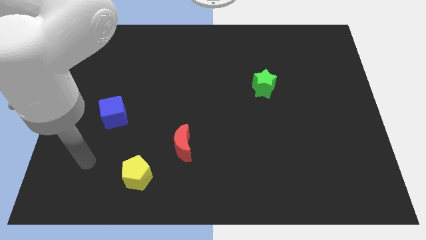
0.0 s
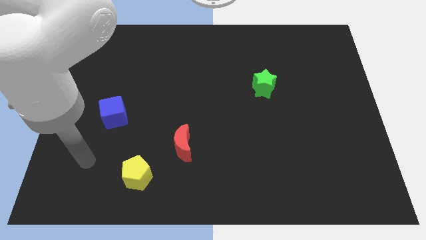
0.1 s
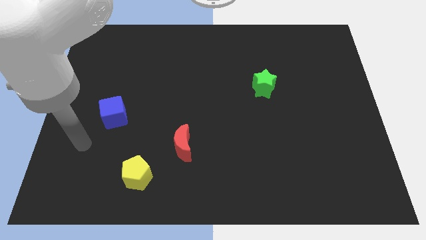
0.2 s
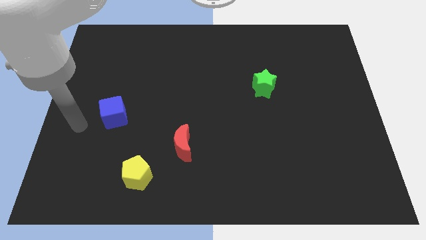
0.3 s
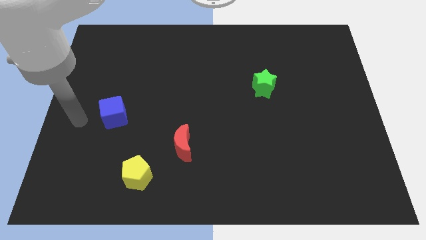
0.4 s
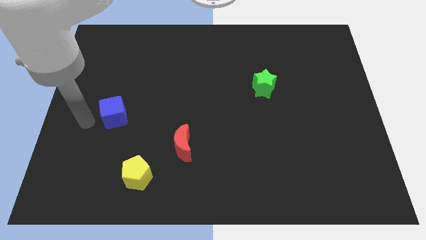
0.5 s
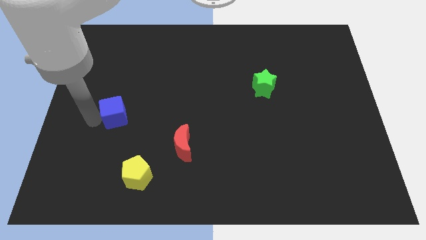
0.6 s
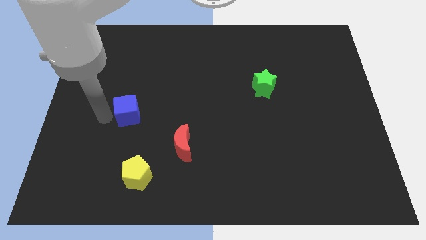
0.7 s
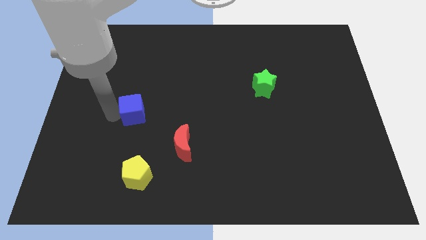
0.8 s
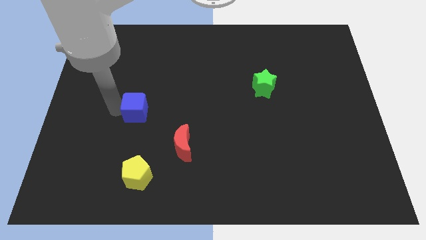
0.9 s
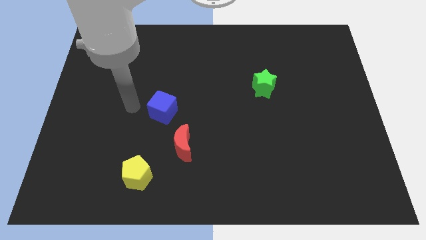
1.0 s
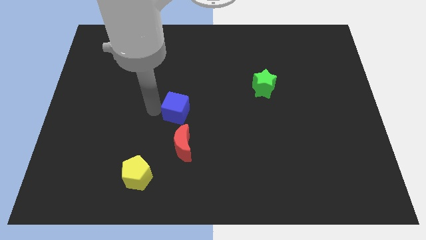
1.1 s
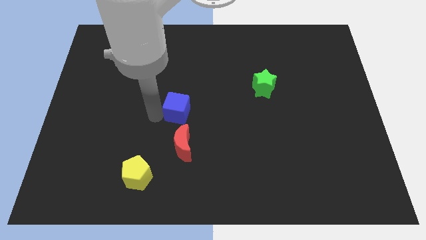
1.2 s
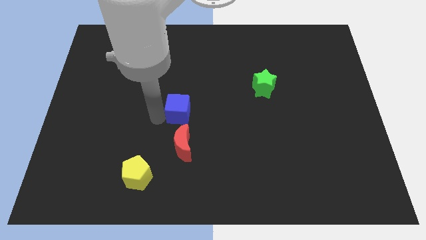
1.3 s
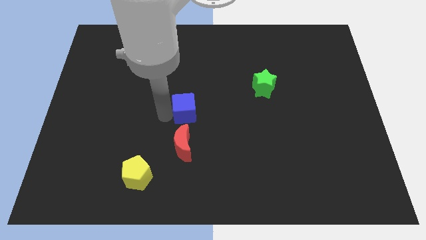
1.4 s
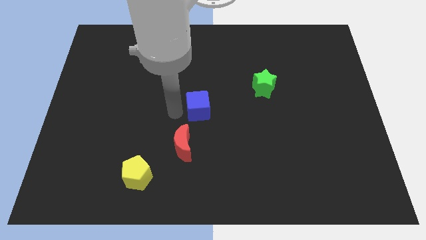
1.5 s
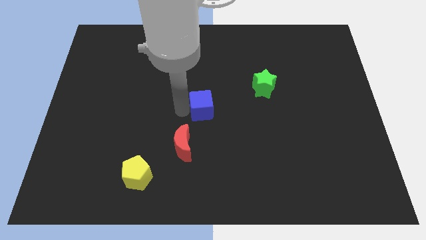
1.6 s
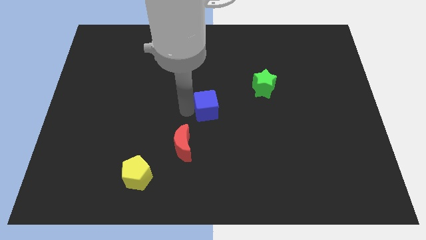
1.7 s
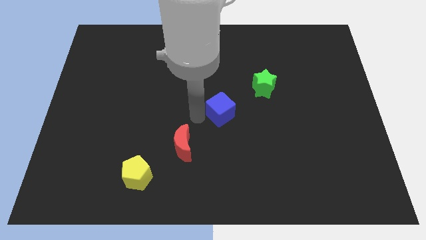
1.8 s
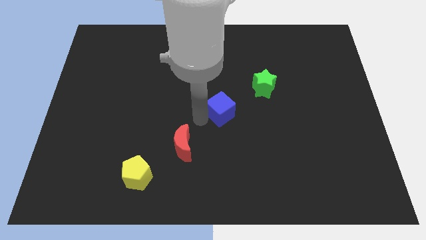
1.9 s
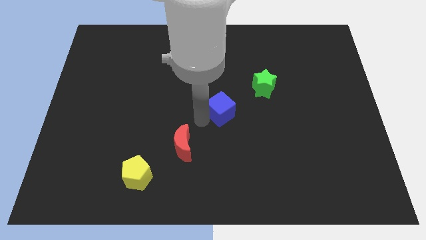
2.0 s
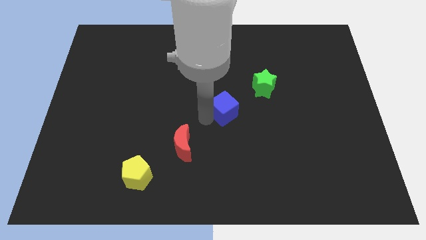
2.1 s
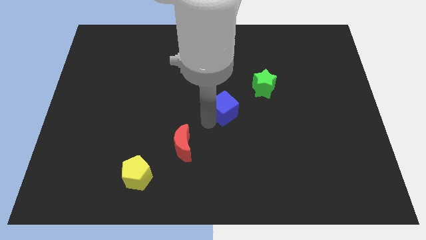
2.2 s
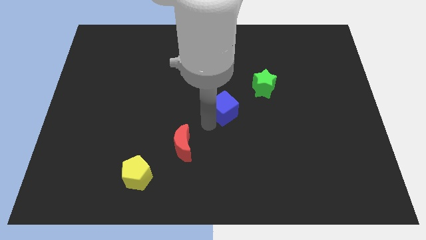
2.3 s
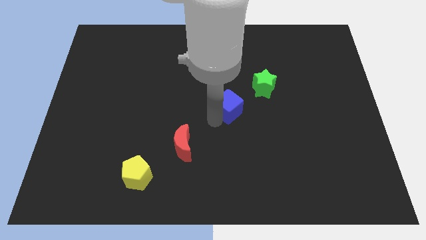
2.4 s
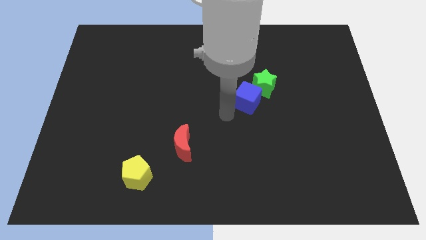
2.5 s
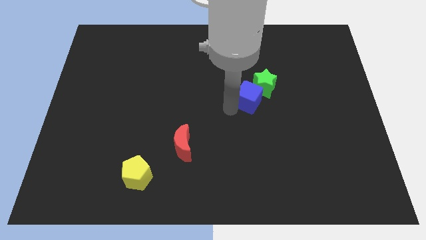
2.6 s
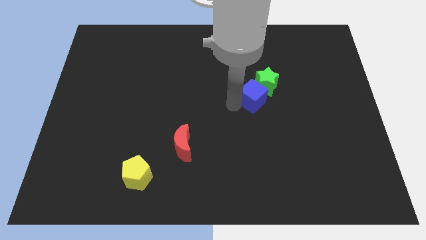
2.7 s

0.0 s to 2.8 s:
move the cube next to the star

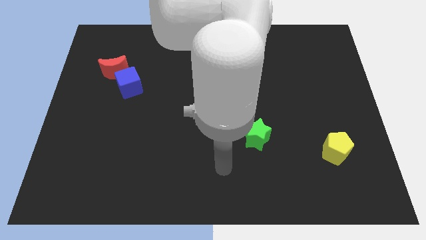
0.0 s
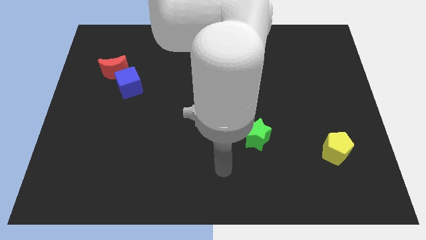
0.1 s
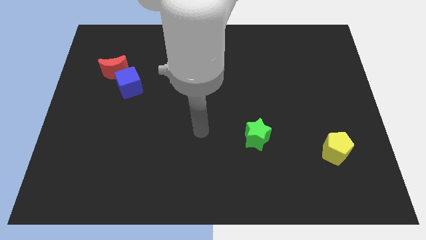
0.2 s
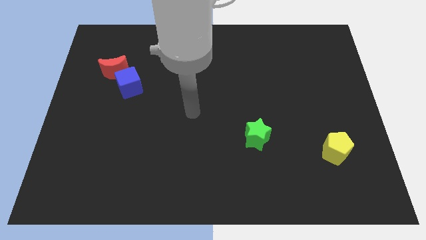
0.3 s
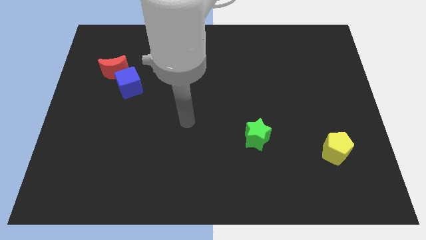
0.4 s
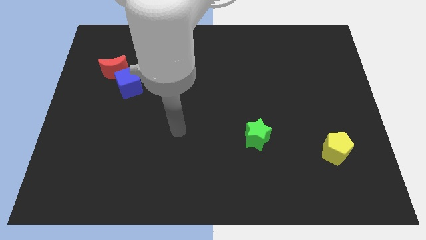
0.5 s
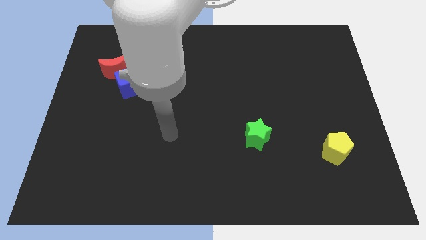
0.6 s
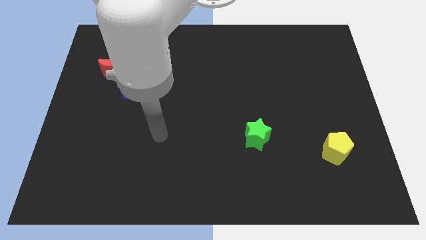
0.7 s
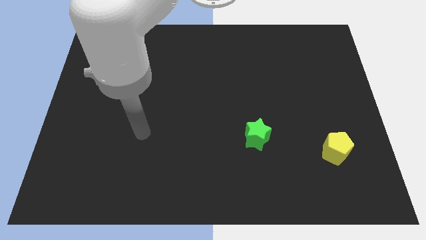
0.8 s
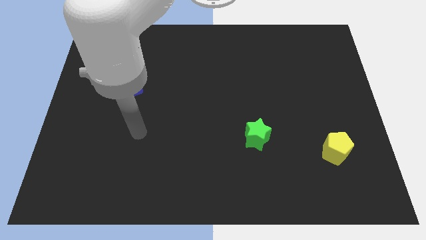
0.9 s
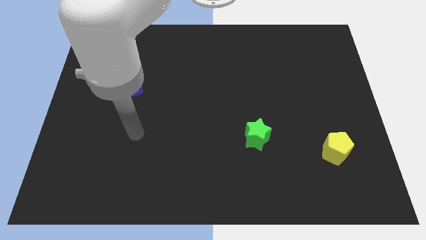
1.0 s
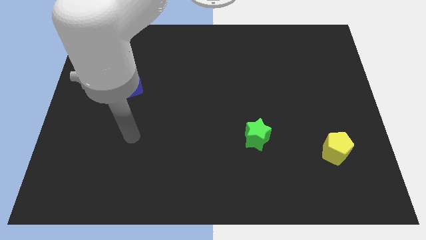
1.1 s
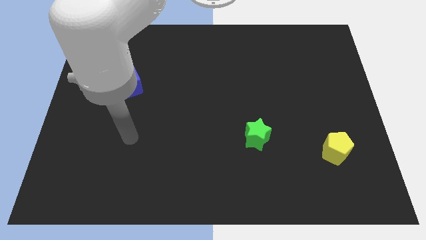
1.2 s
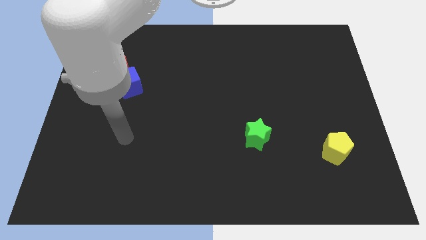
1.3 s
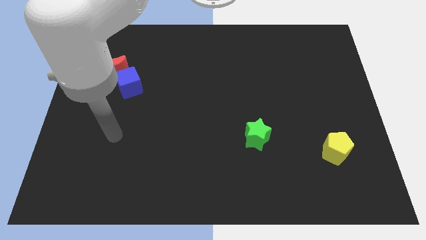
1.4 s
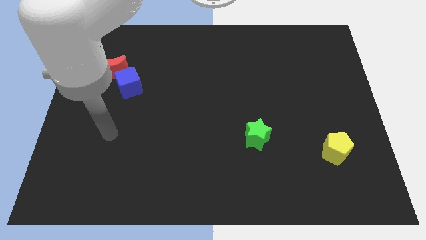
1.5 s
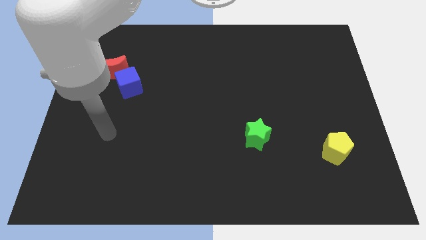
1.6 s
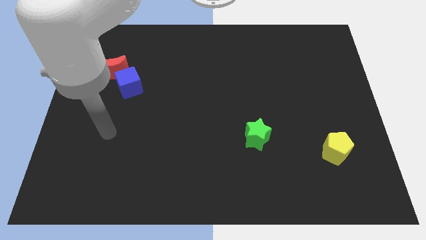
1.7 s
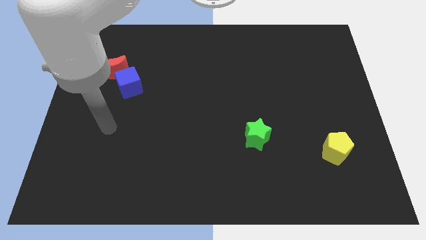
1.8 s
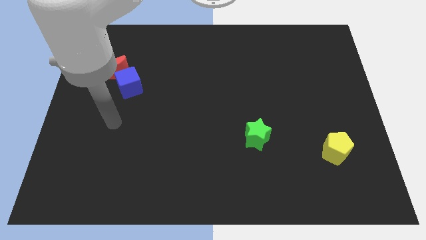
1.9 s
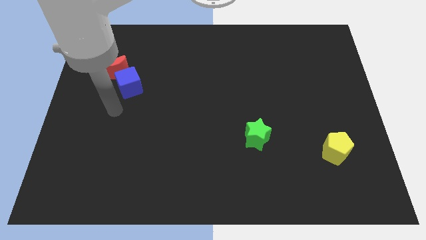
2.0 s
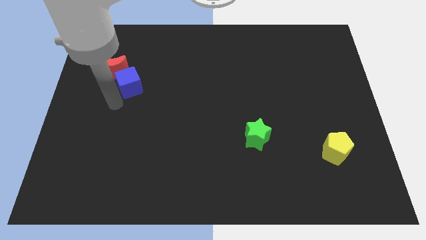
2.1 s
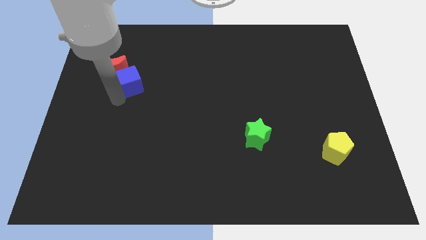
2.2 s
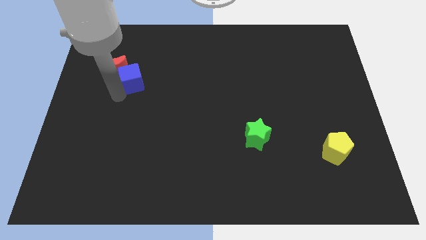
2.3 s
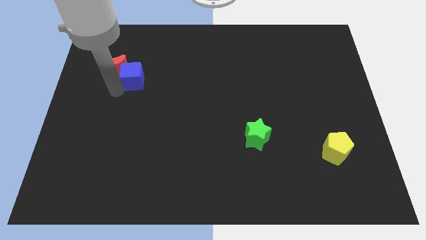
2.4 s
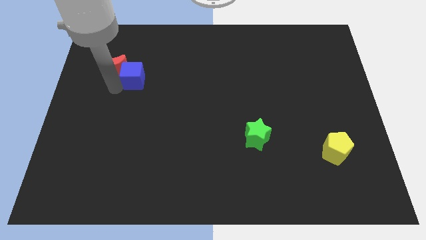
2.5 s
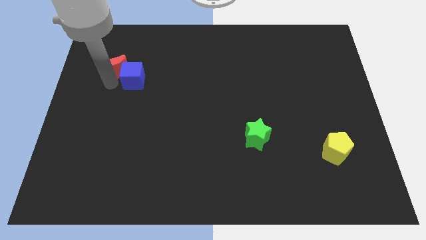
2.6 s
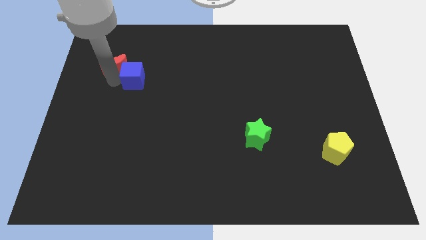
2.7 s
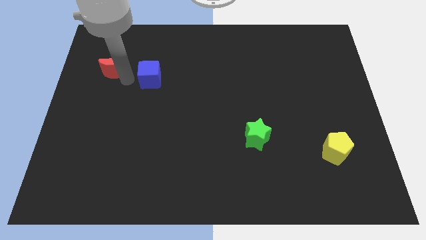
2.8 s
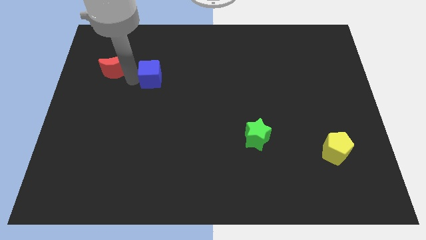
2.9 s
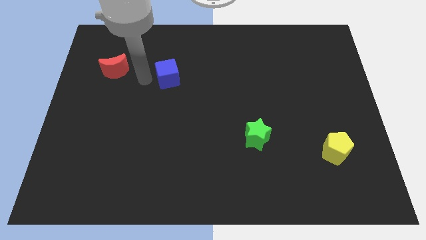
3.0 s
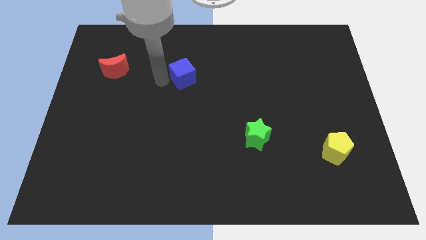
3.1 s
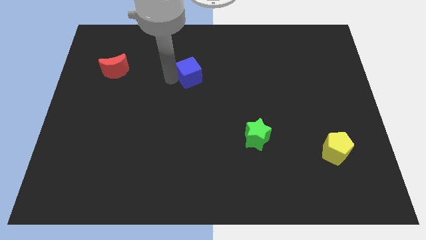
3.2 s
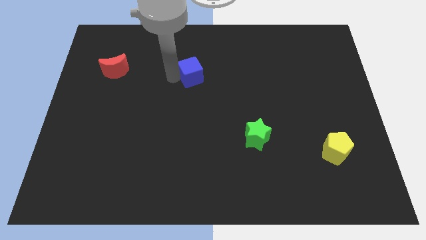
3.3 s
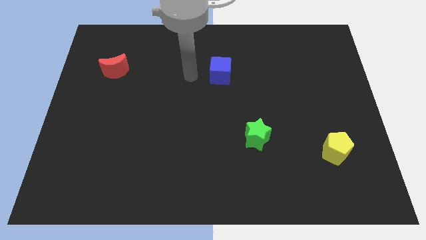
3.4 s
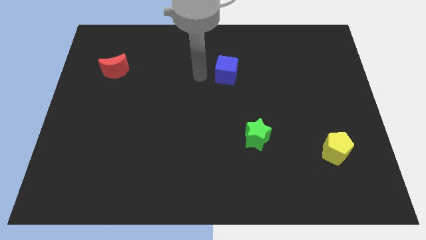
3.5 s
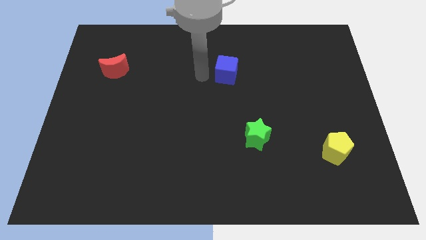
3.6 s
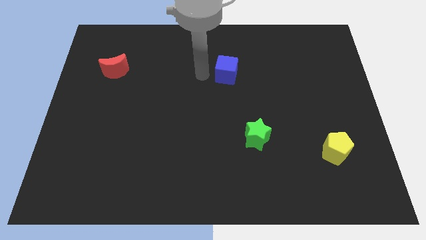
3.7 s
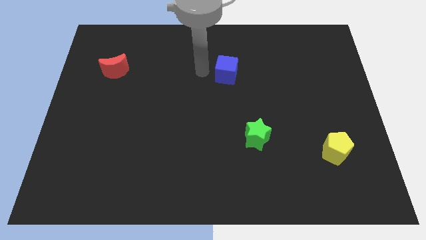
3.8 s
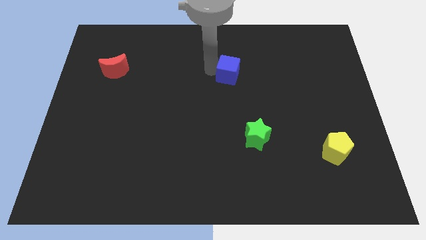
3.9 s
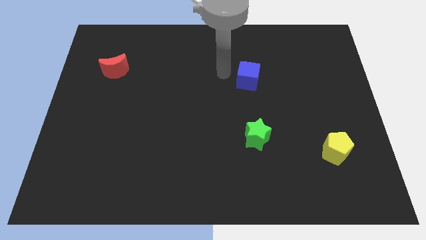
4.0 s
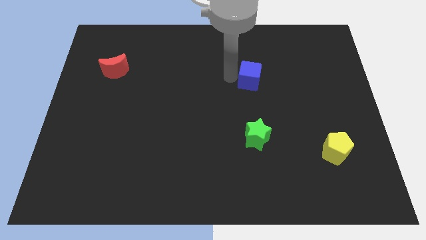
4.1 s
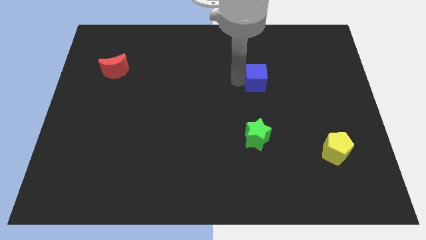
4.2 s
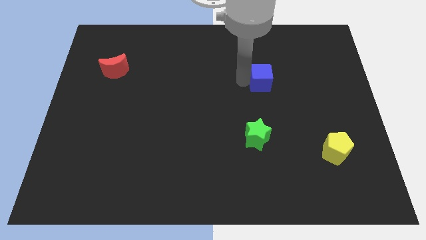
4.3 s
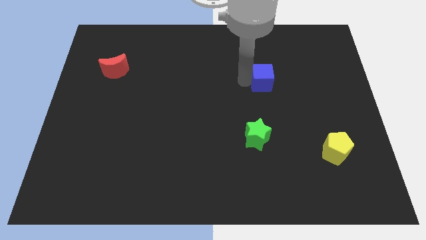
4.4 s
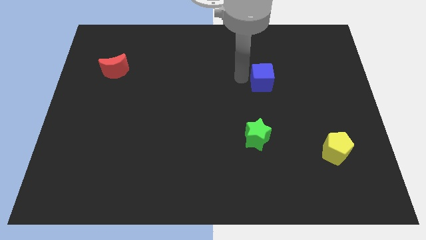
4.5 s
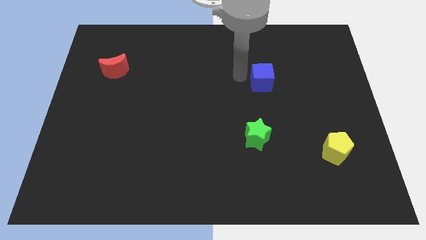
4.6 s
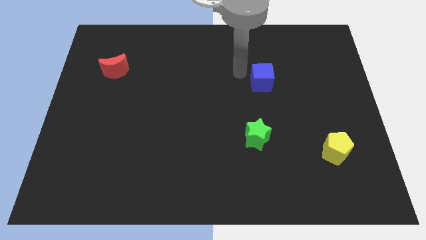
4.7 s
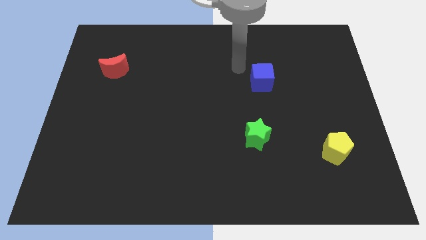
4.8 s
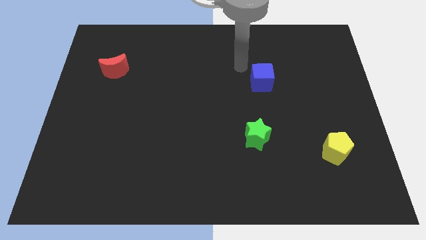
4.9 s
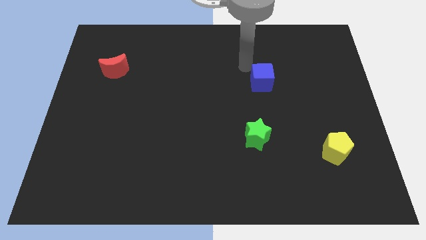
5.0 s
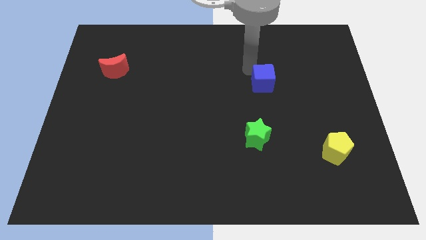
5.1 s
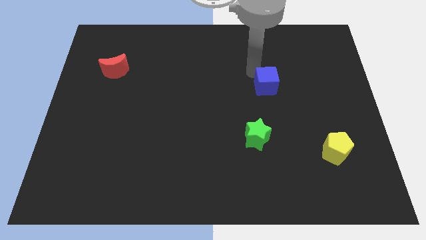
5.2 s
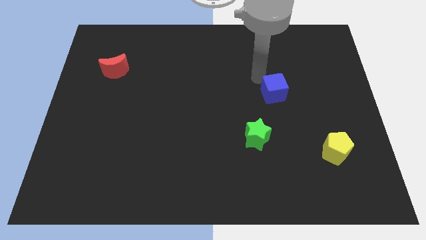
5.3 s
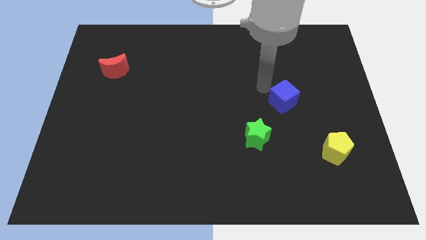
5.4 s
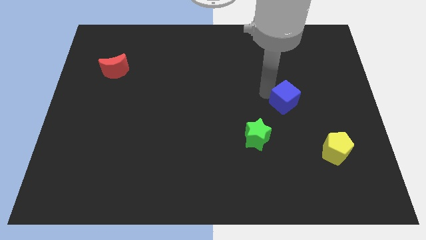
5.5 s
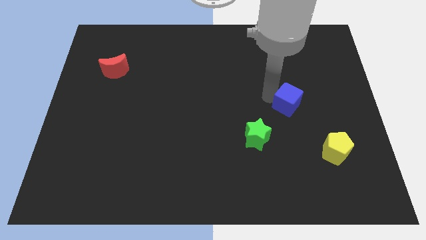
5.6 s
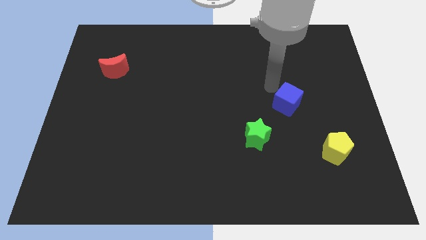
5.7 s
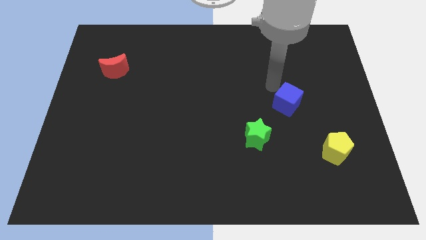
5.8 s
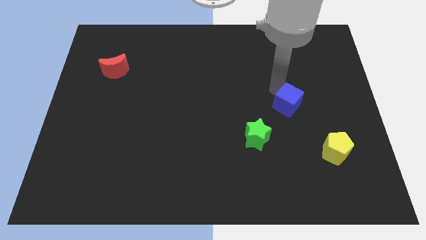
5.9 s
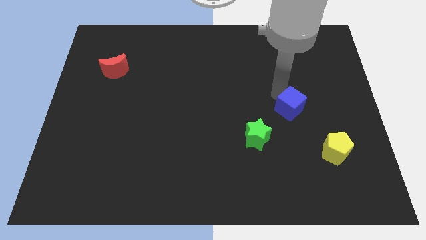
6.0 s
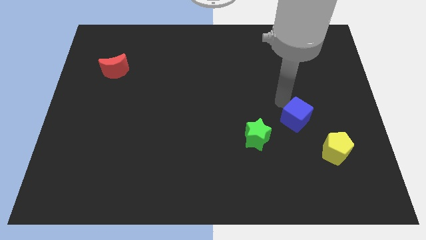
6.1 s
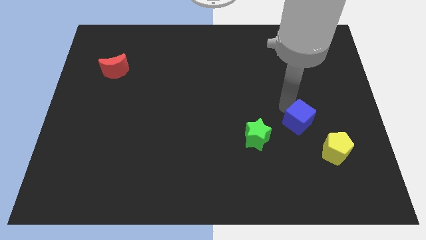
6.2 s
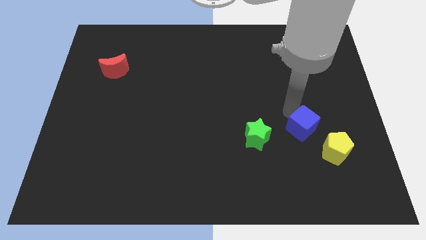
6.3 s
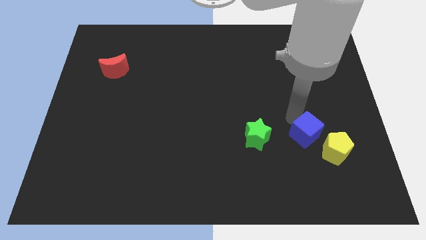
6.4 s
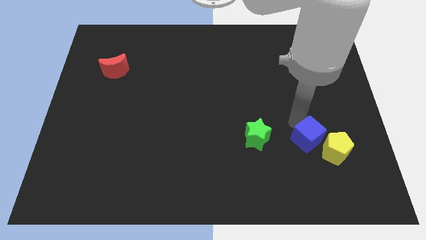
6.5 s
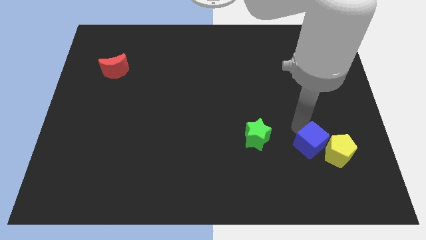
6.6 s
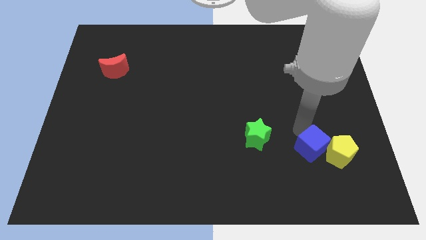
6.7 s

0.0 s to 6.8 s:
push the blue cube towards the yellow pentagon
